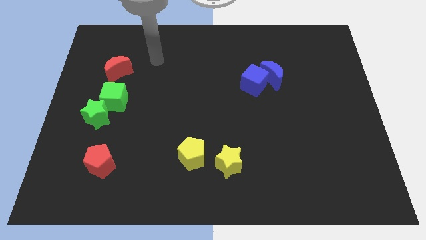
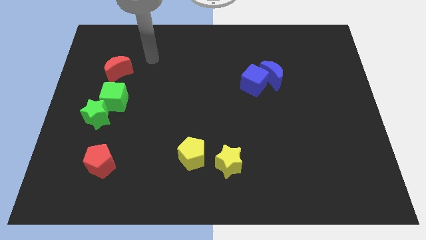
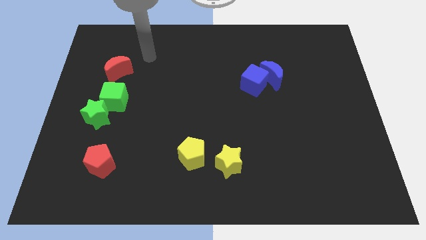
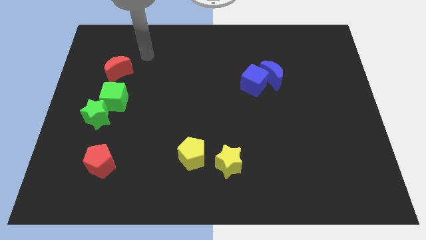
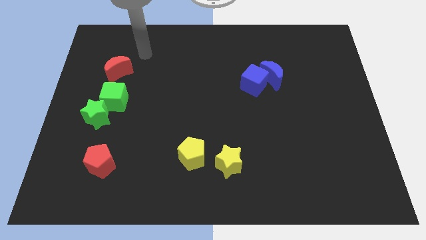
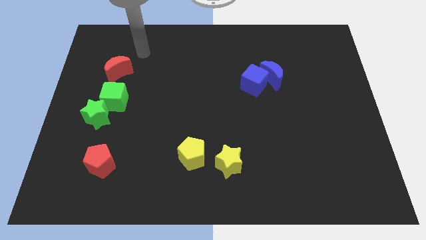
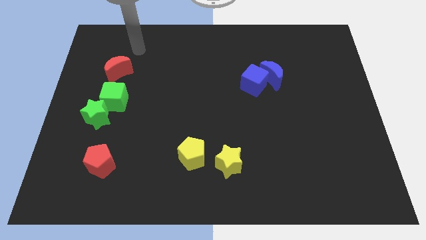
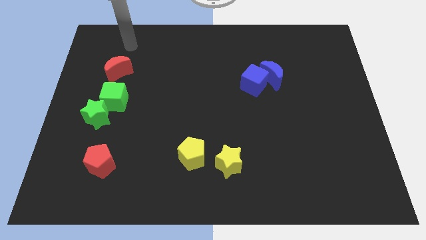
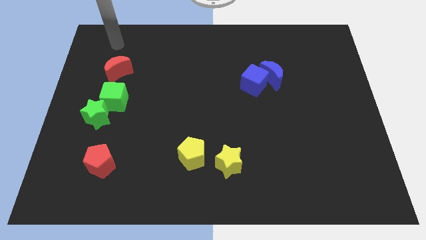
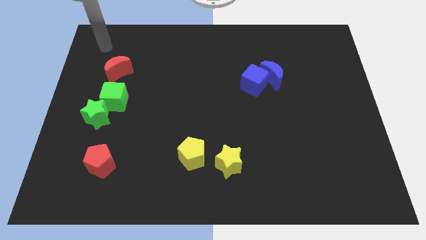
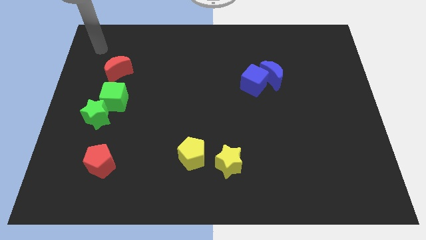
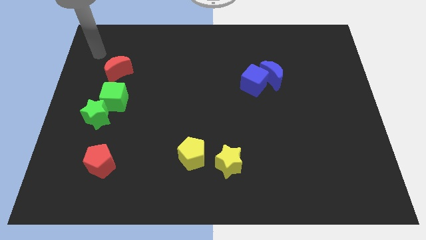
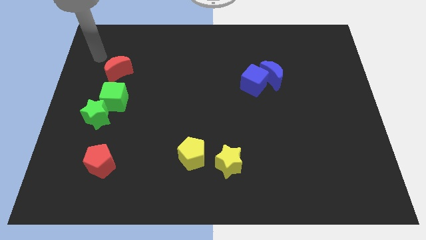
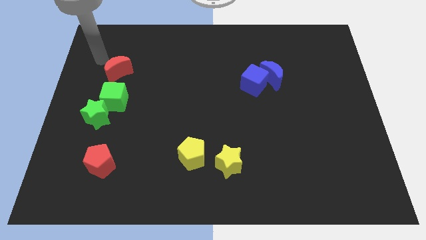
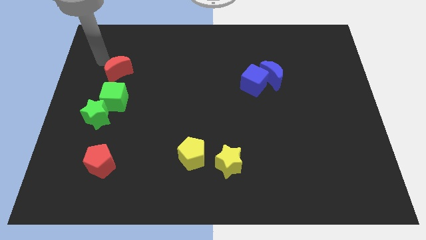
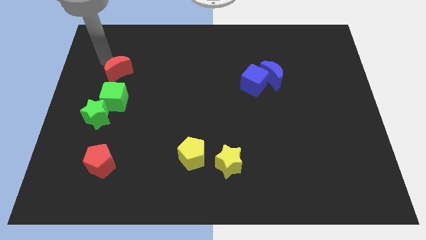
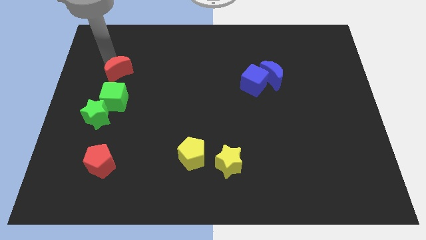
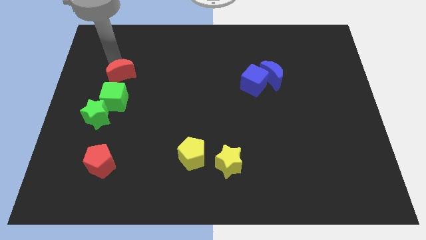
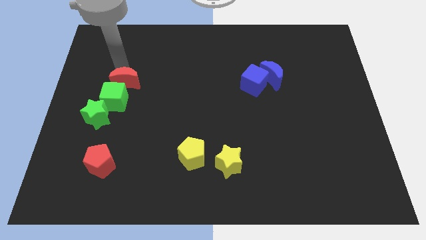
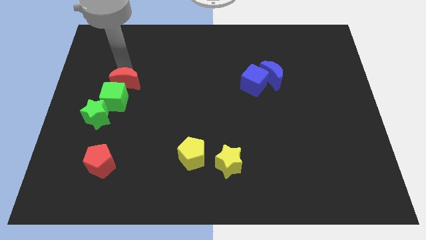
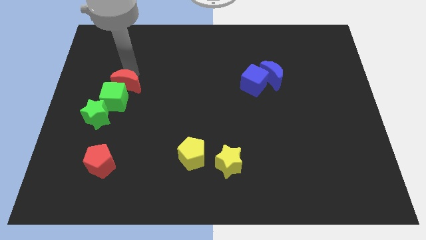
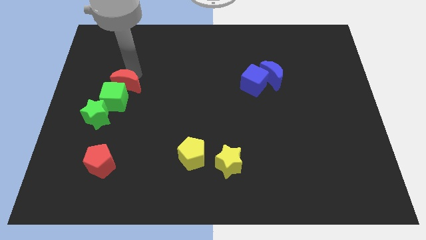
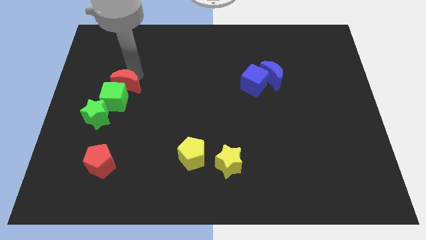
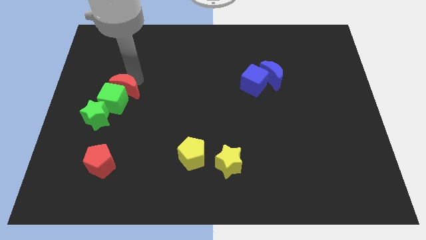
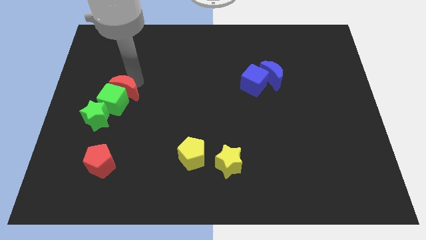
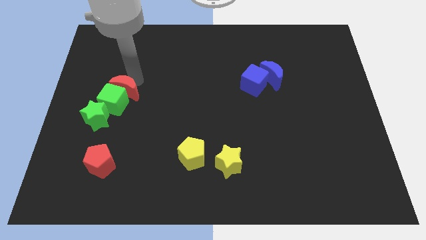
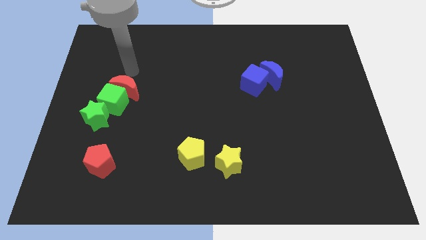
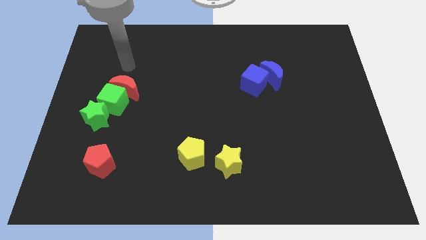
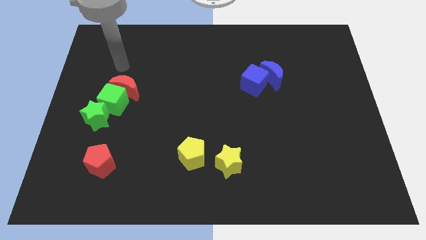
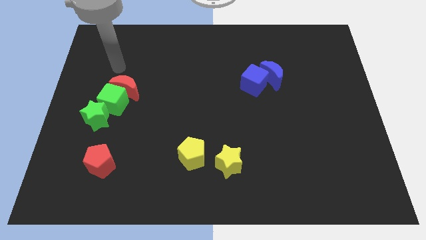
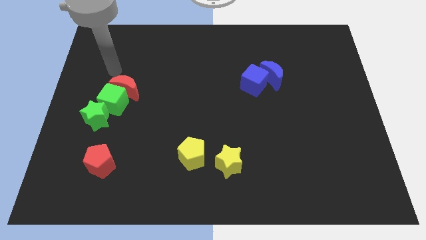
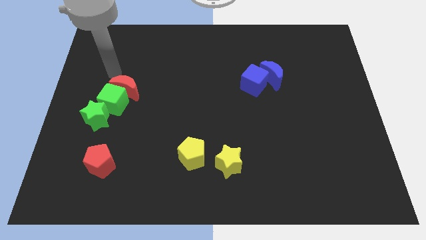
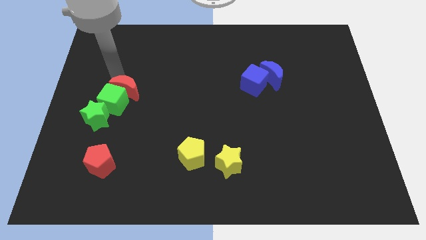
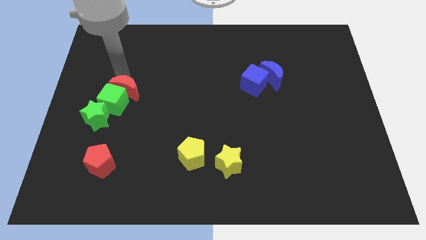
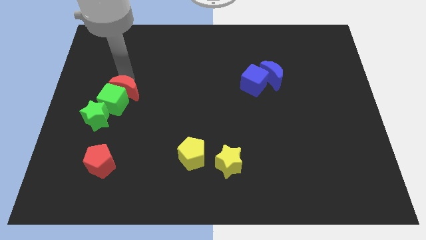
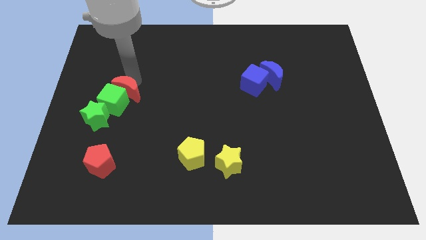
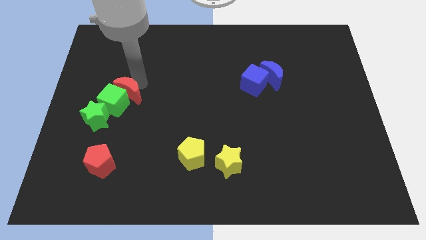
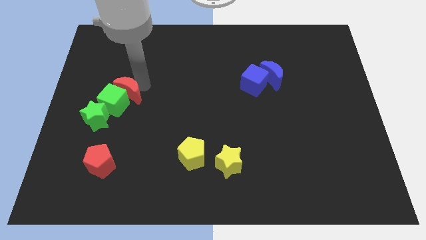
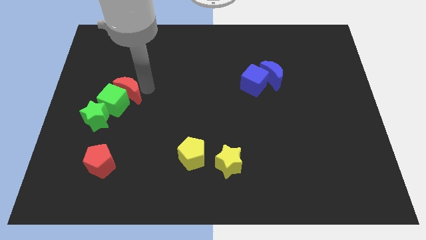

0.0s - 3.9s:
push the red moon into the green cube in a downward direction

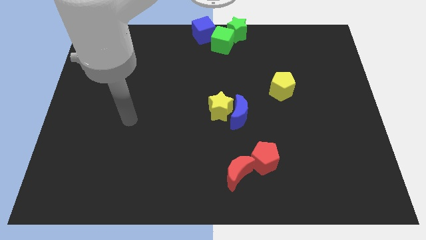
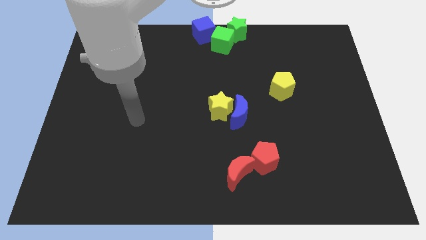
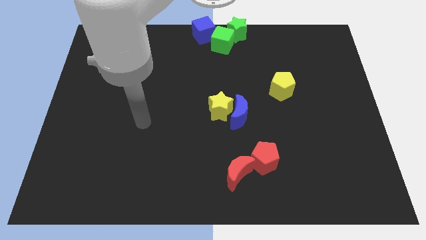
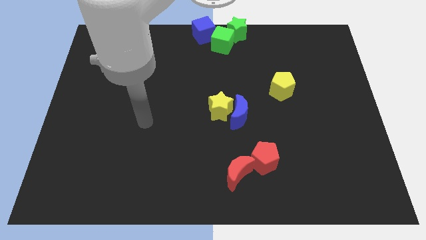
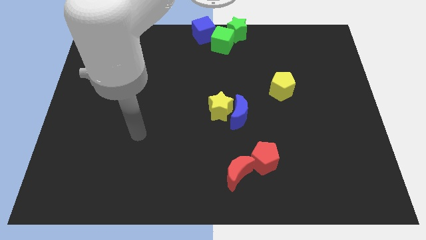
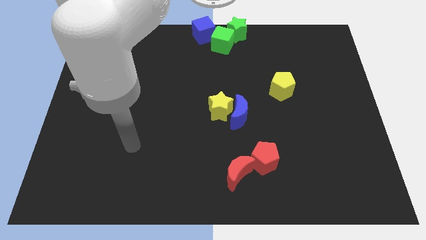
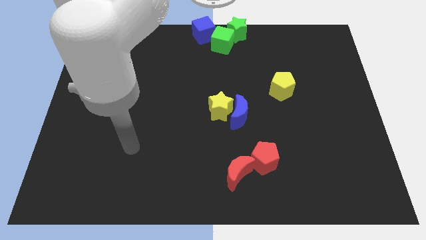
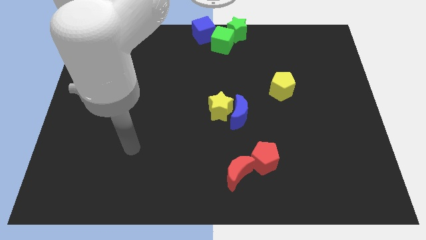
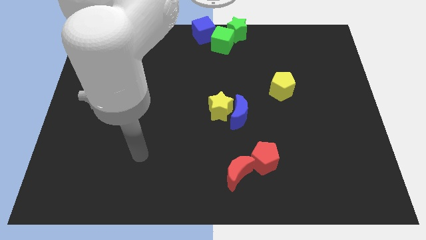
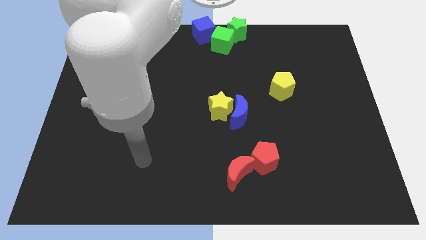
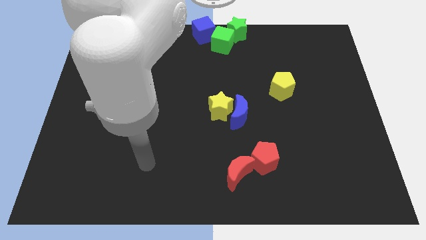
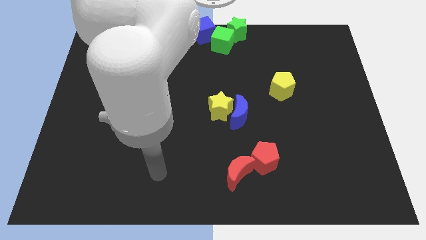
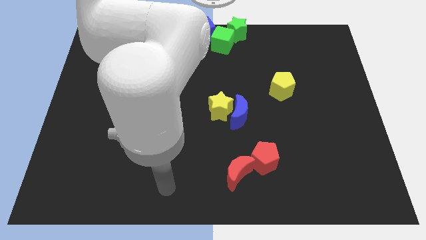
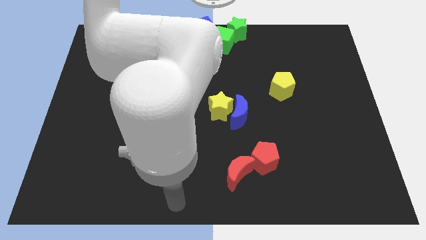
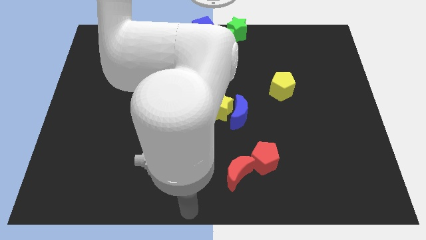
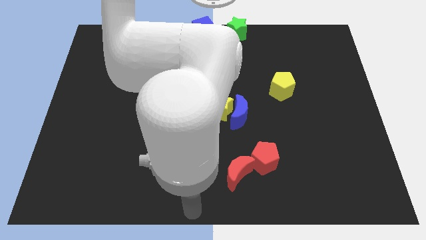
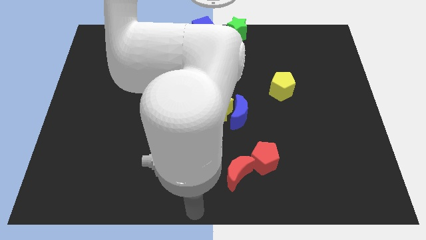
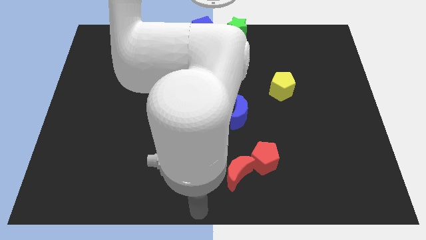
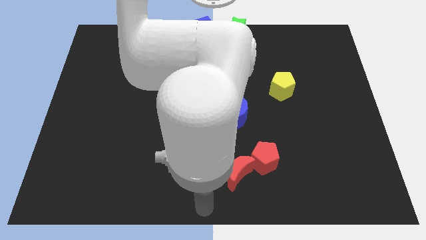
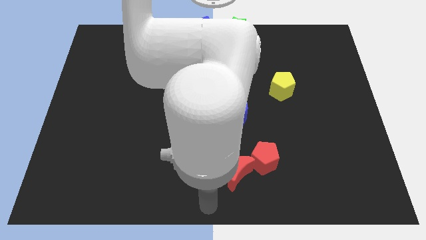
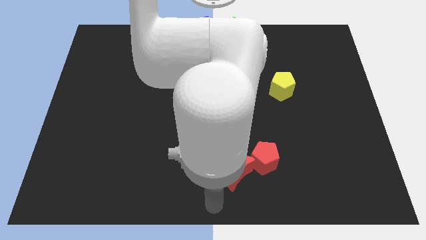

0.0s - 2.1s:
move arm towards the red moon

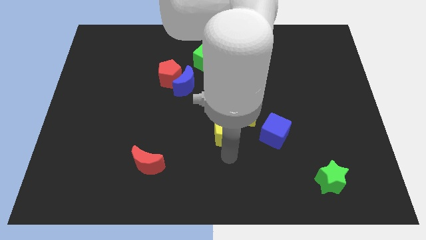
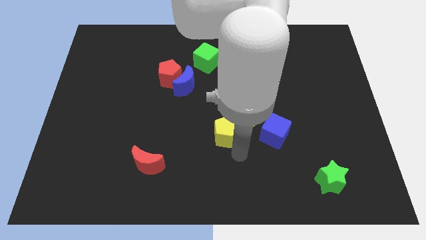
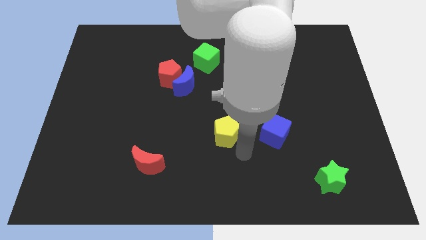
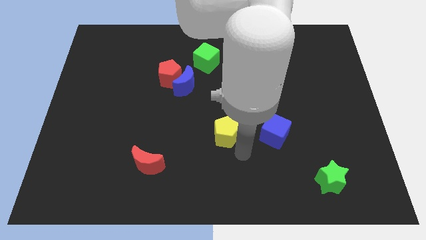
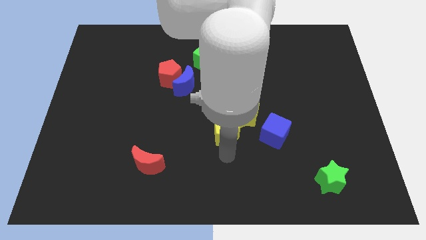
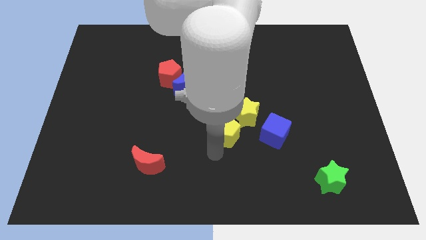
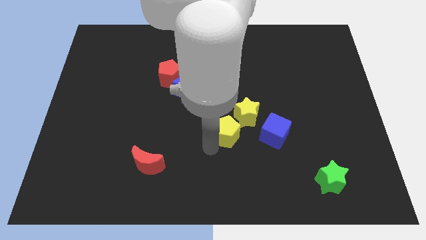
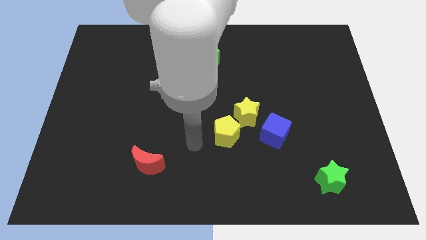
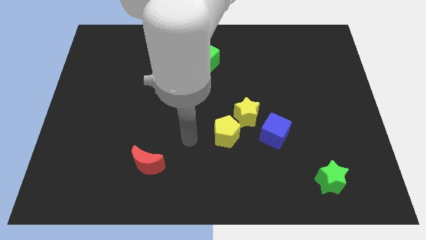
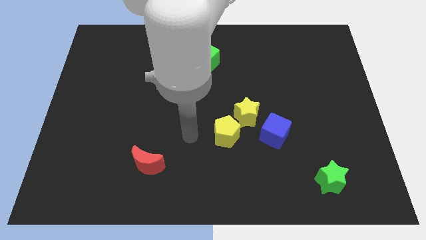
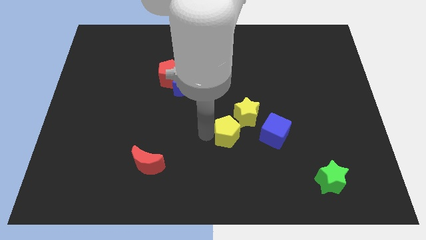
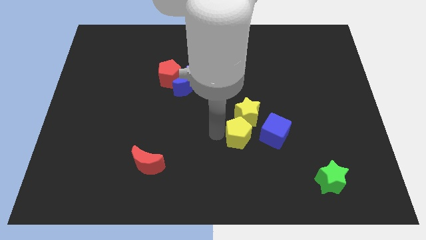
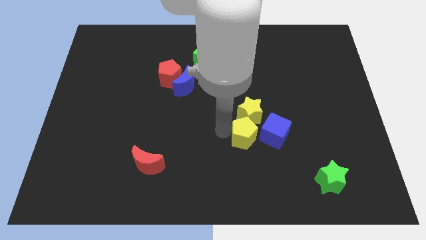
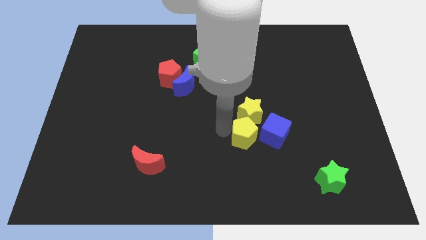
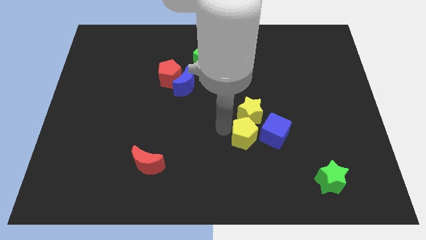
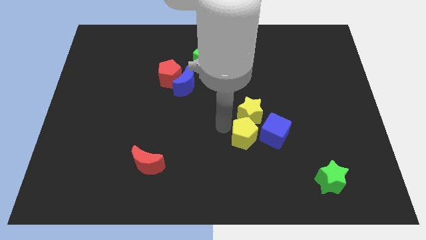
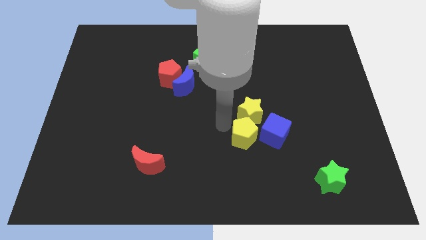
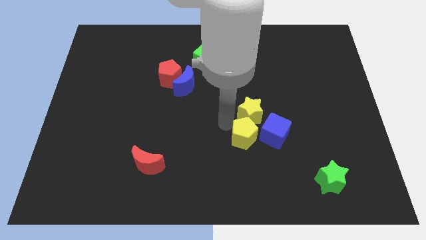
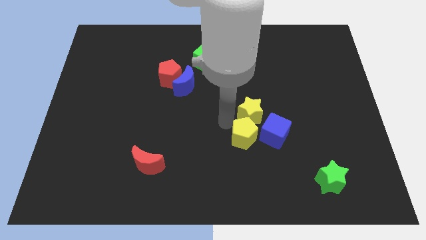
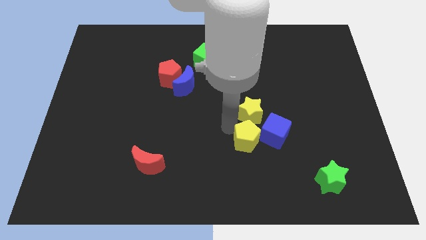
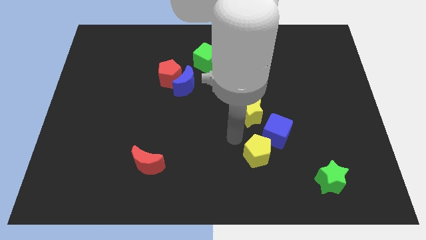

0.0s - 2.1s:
slide the yellow pentagon vertically below the yellow star

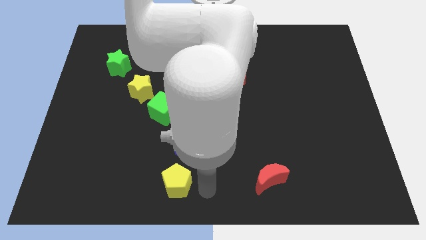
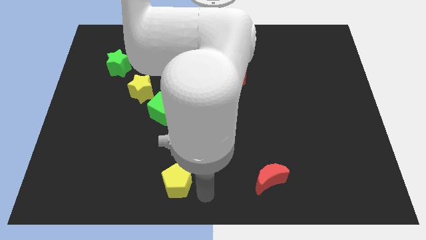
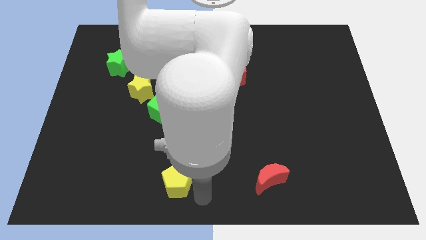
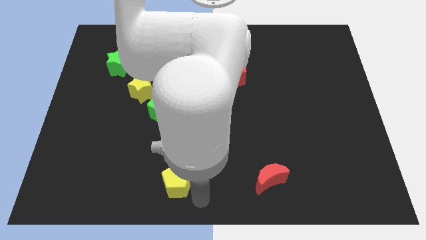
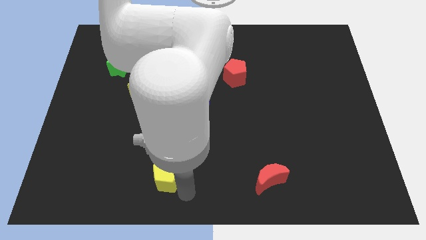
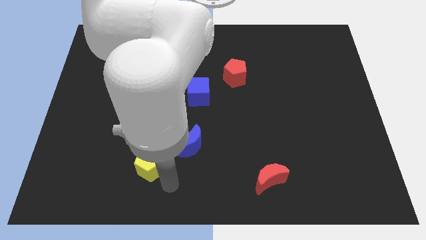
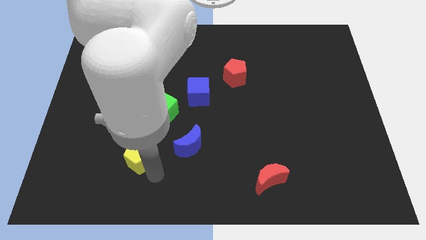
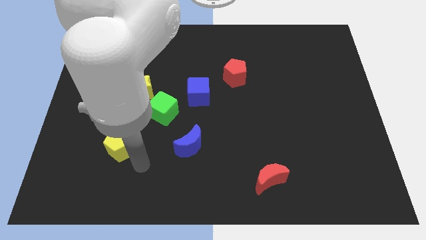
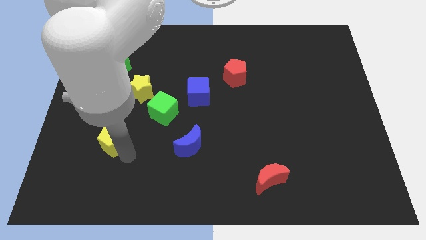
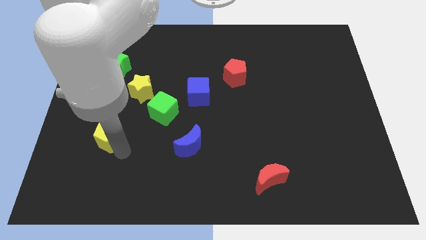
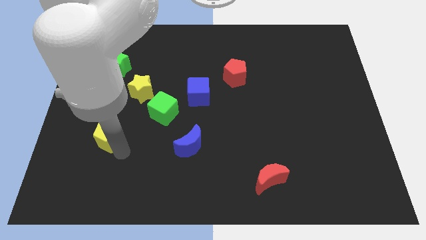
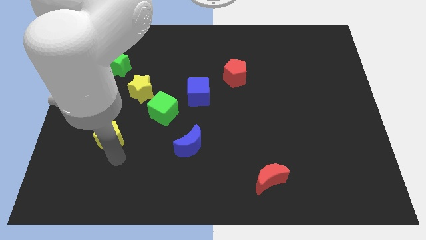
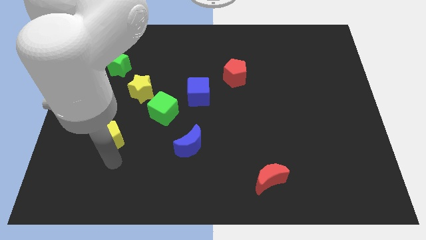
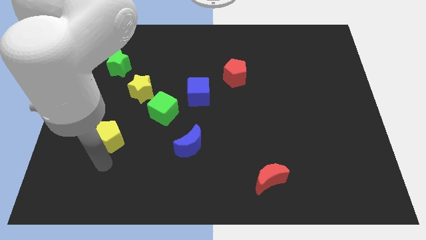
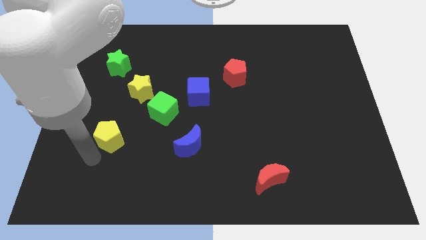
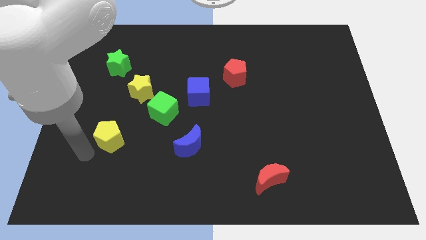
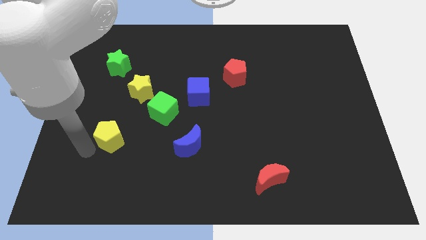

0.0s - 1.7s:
move the yellow pentagon left side of the green cube
